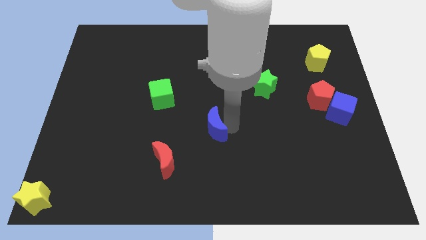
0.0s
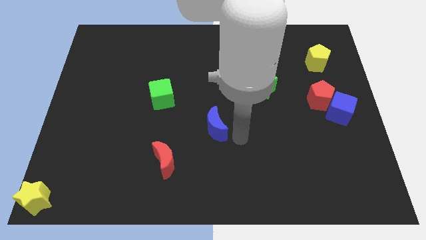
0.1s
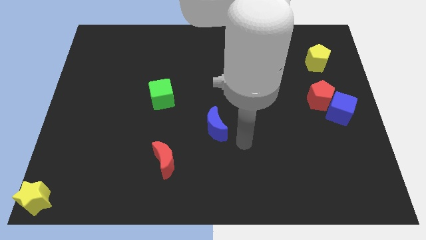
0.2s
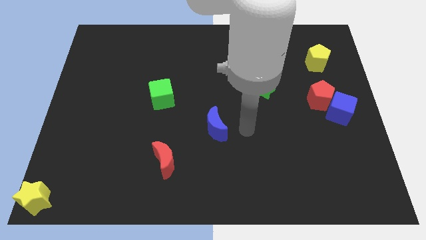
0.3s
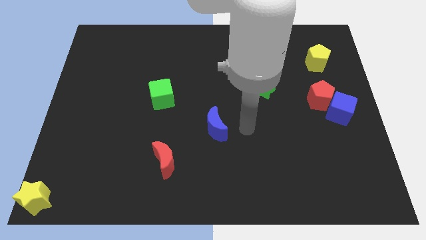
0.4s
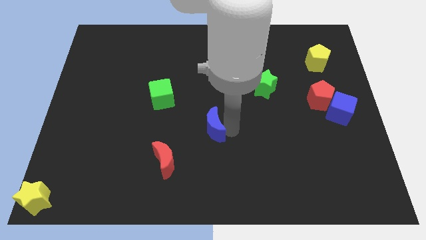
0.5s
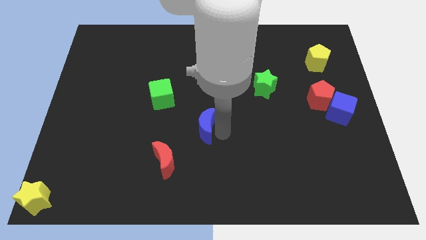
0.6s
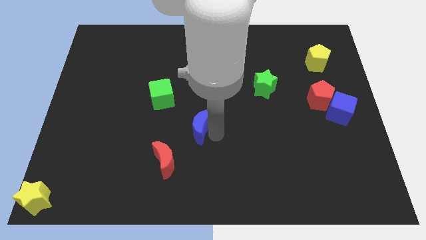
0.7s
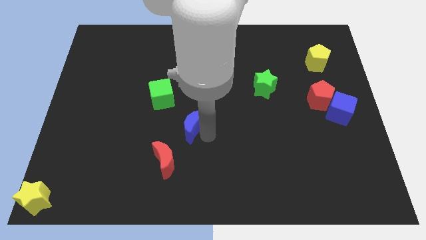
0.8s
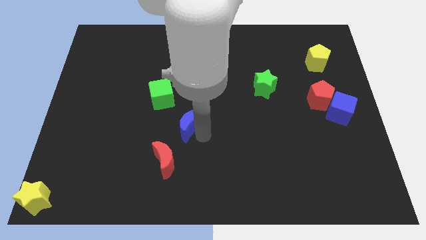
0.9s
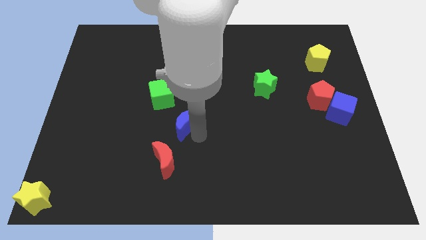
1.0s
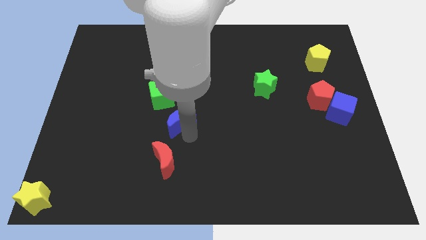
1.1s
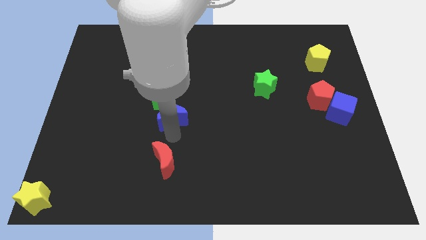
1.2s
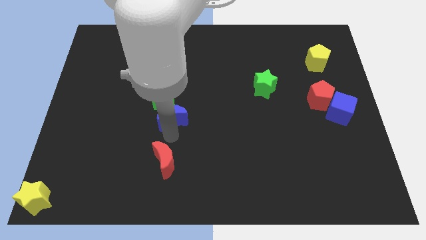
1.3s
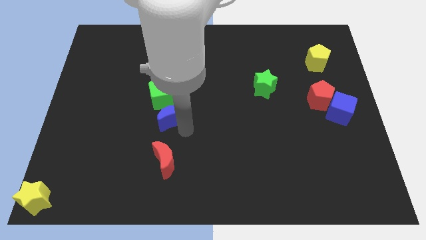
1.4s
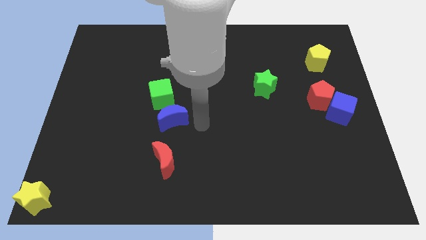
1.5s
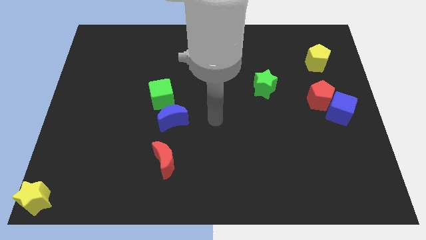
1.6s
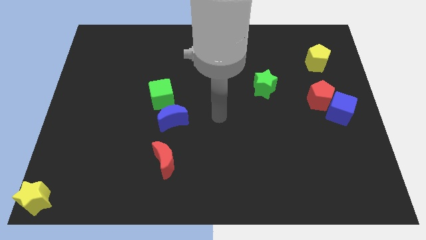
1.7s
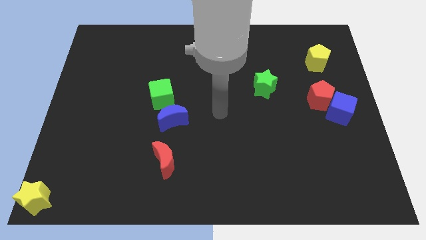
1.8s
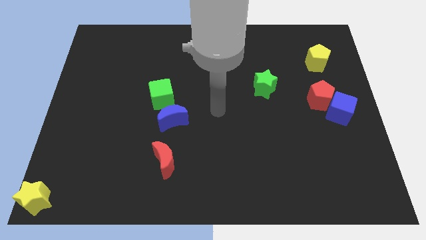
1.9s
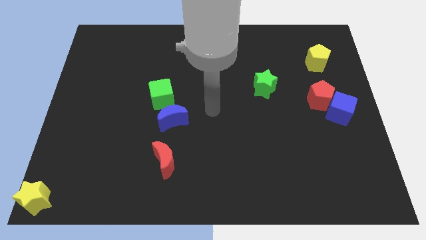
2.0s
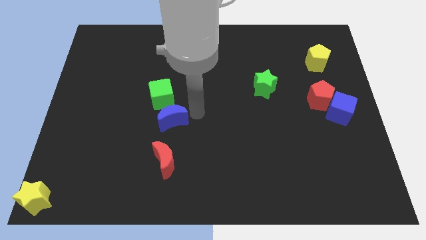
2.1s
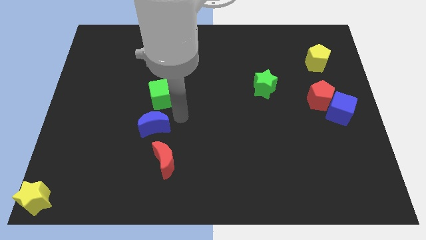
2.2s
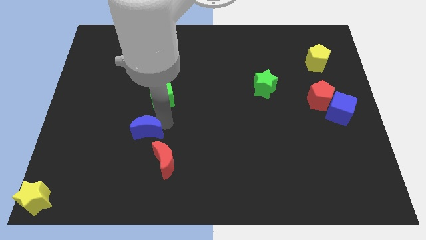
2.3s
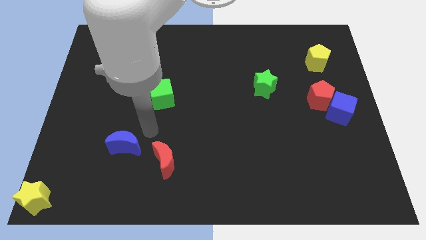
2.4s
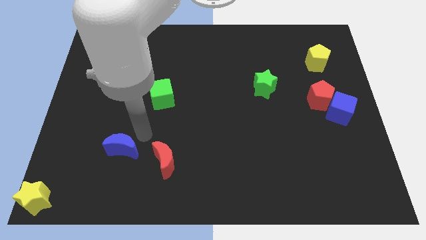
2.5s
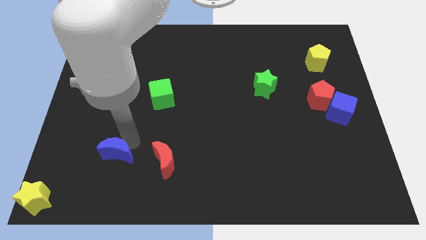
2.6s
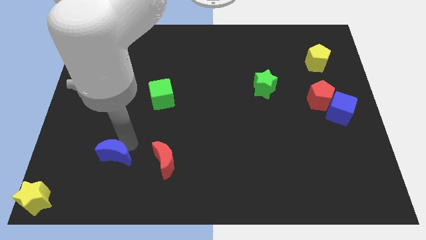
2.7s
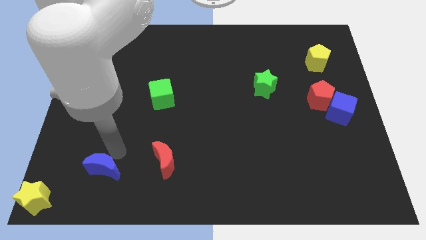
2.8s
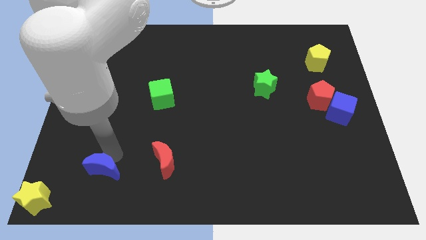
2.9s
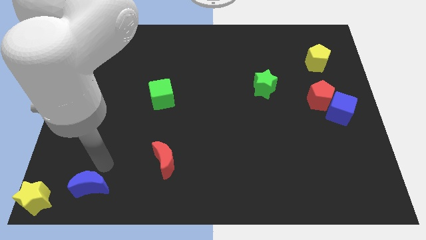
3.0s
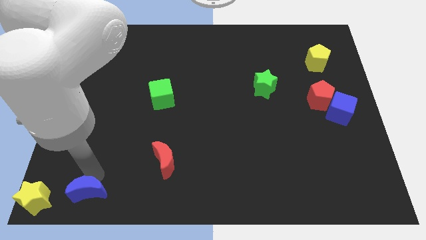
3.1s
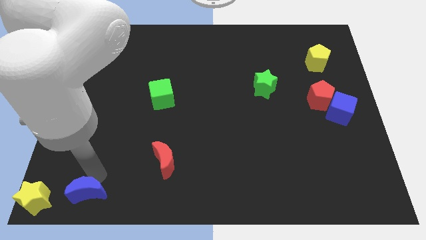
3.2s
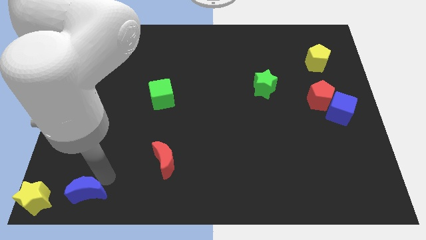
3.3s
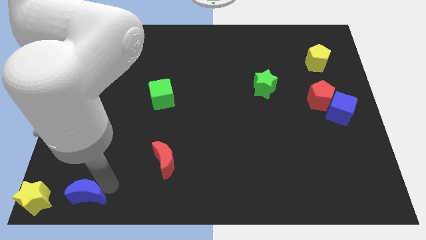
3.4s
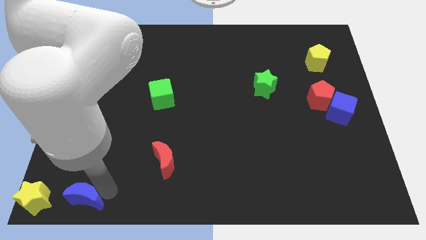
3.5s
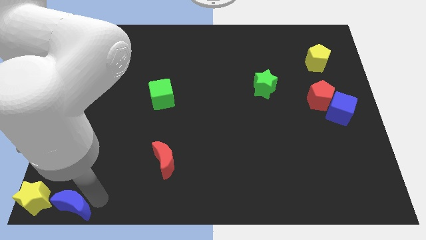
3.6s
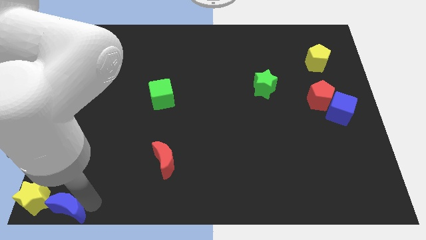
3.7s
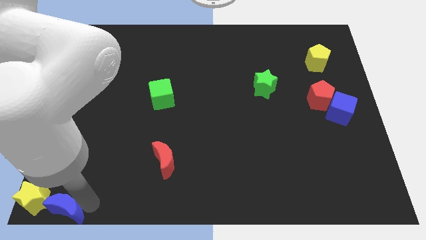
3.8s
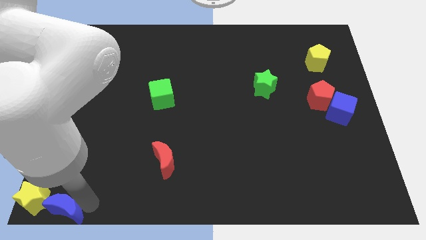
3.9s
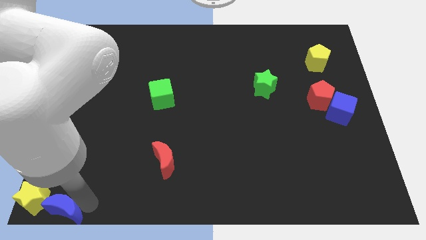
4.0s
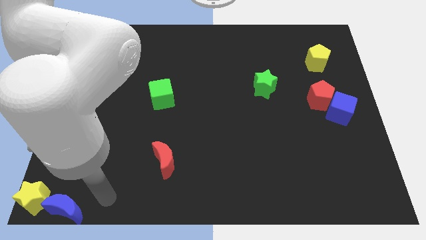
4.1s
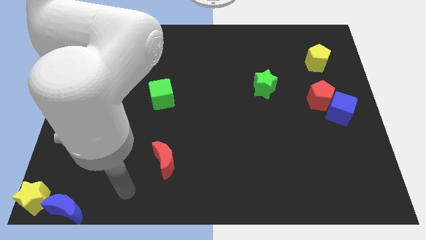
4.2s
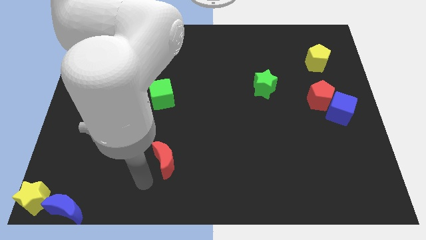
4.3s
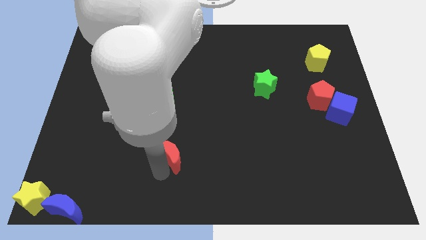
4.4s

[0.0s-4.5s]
drag the blue moon into a yellow star

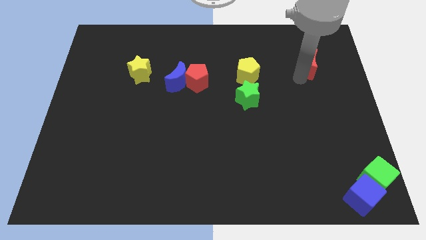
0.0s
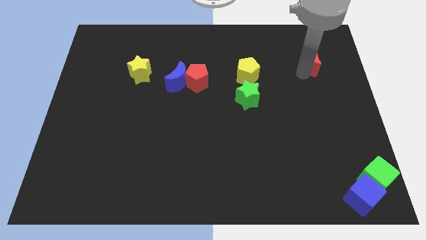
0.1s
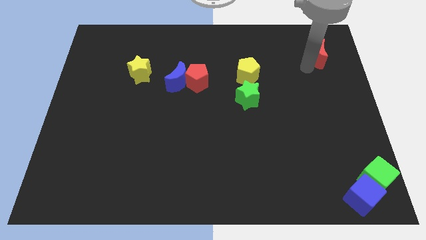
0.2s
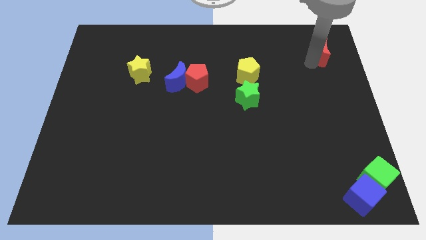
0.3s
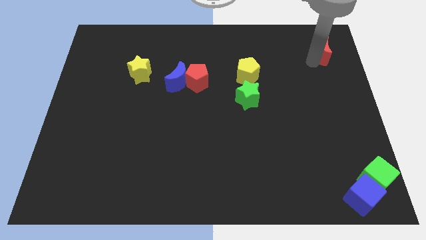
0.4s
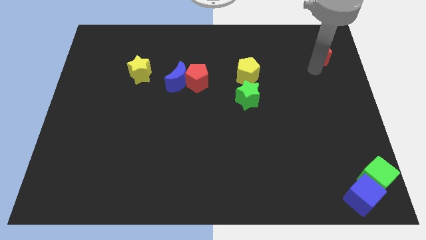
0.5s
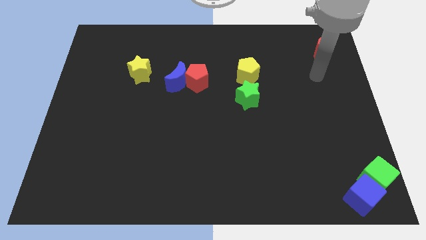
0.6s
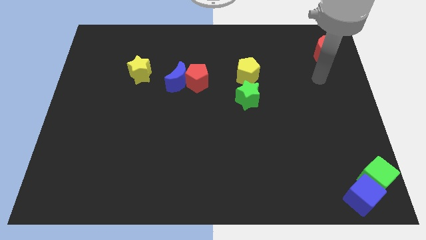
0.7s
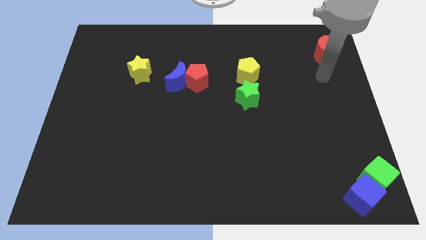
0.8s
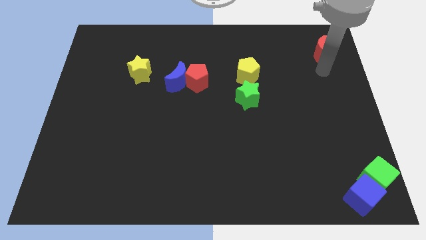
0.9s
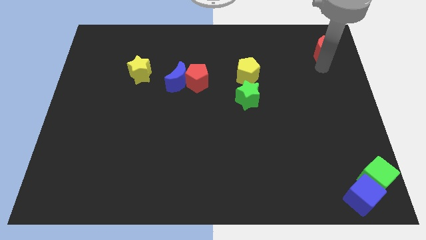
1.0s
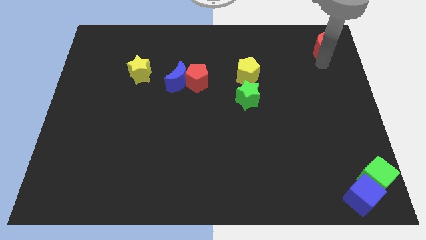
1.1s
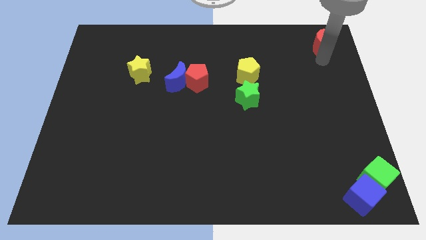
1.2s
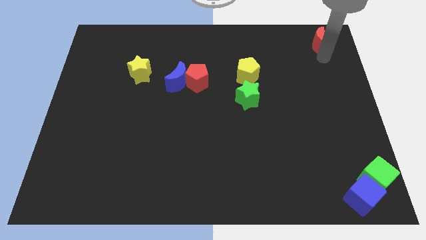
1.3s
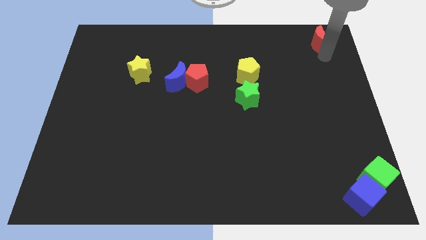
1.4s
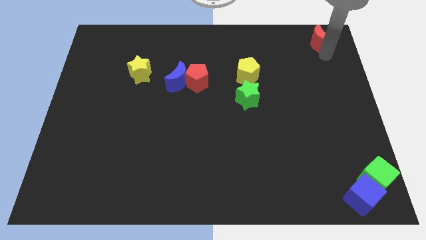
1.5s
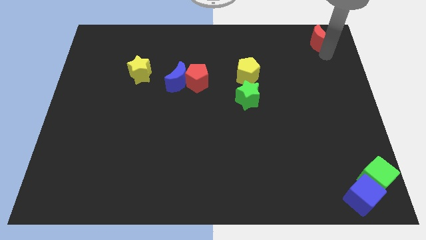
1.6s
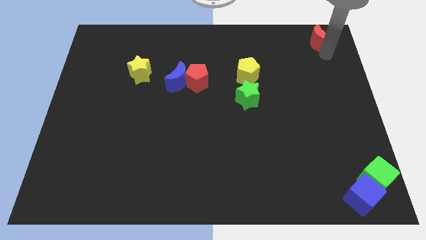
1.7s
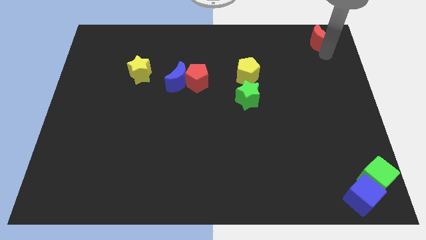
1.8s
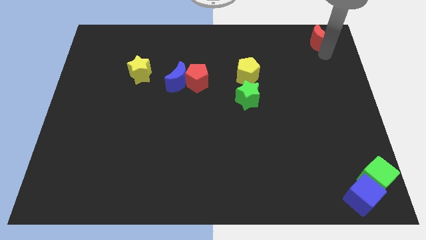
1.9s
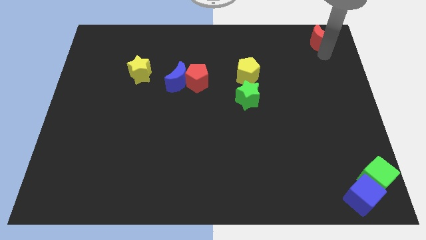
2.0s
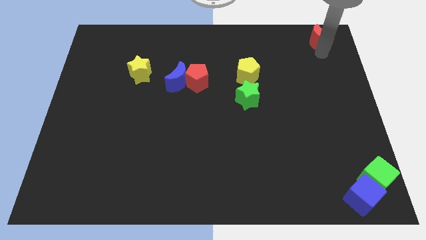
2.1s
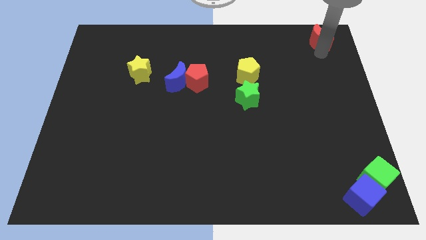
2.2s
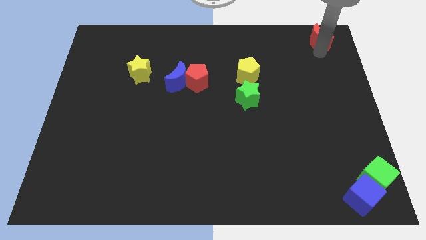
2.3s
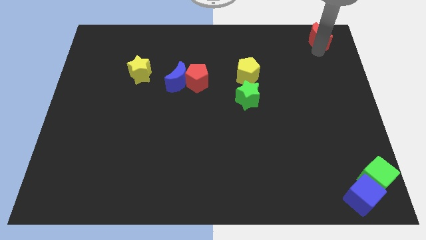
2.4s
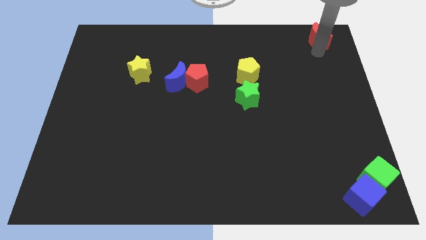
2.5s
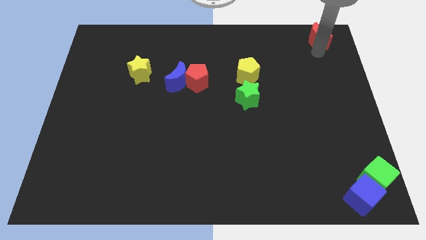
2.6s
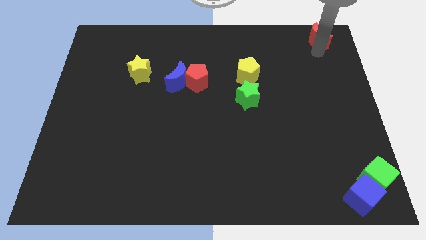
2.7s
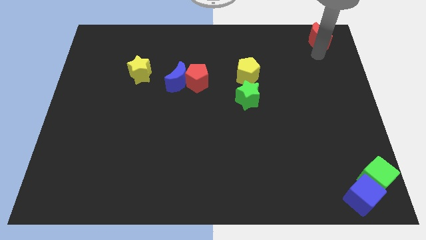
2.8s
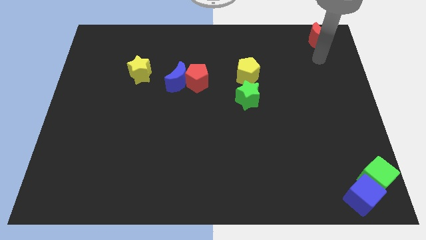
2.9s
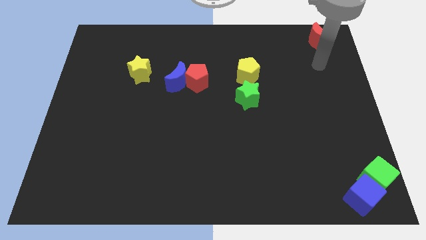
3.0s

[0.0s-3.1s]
drag the red crescent to the top side of the board

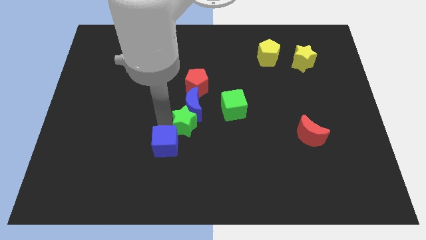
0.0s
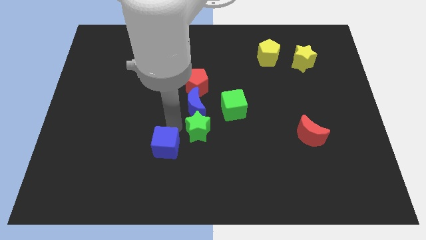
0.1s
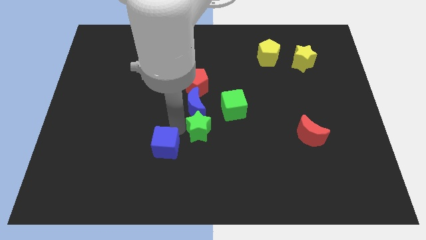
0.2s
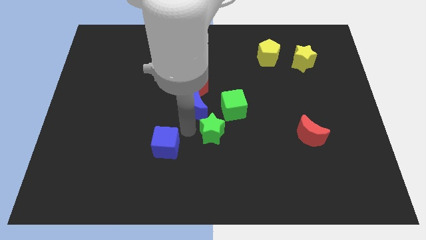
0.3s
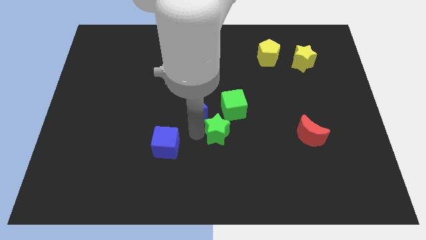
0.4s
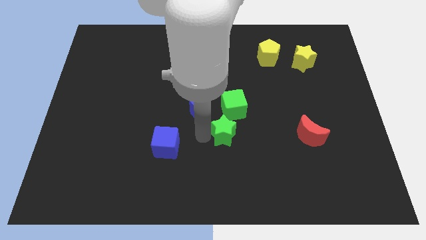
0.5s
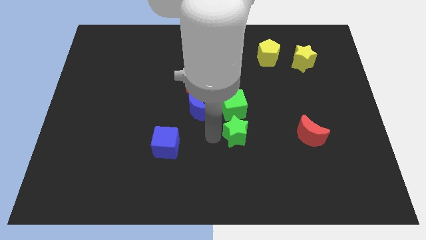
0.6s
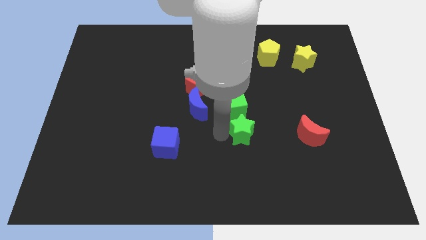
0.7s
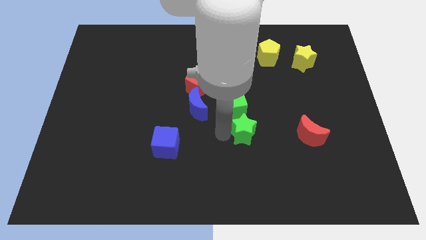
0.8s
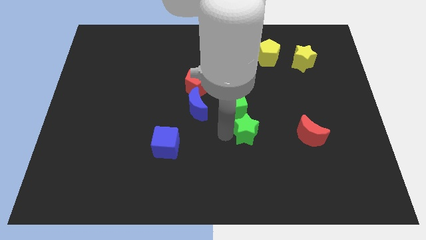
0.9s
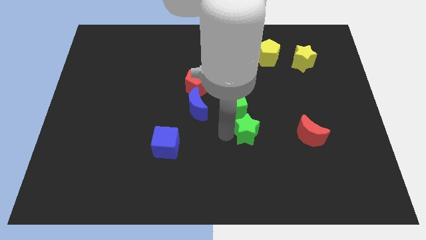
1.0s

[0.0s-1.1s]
take the green star to the bottom of the green cube

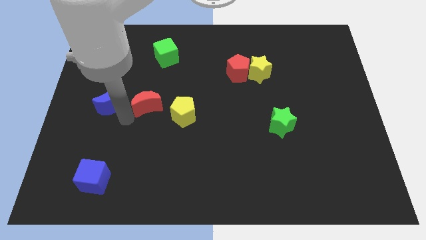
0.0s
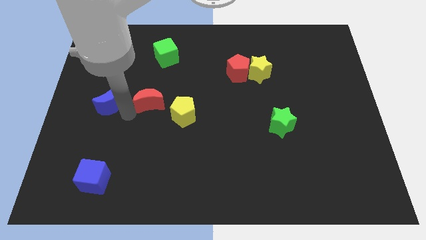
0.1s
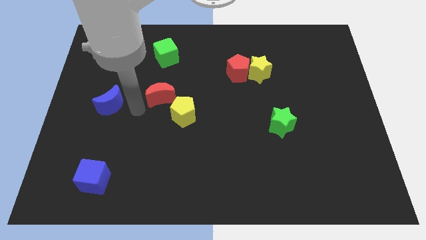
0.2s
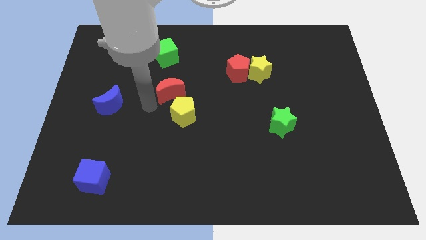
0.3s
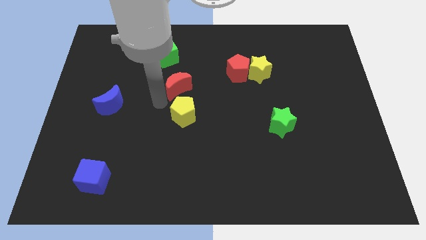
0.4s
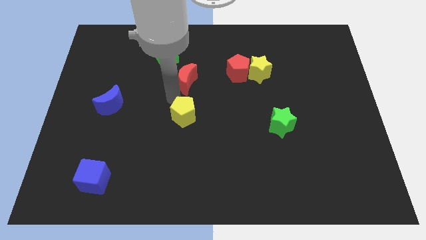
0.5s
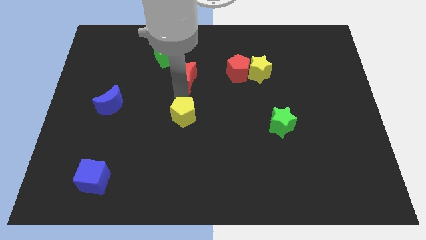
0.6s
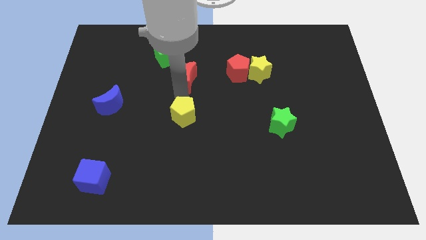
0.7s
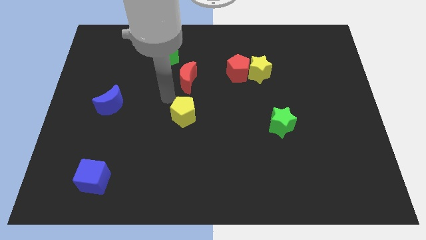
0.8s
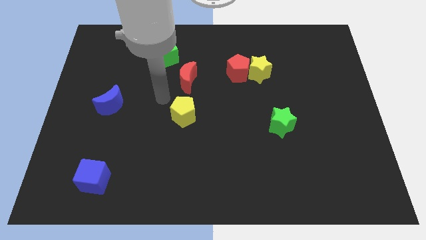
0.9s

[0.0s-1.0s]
place red crescent above yellow pentagon
